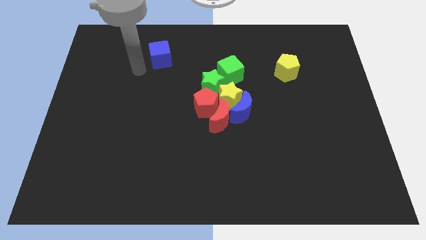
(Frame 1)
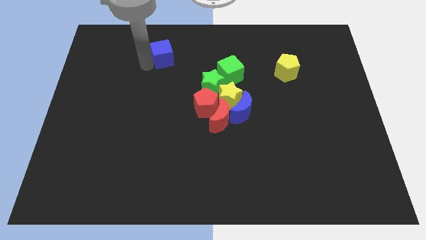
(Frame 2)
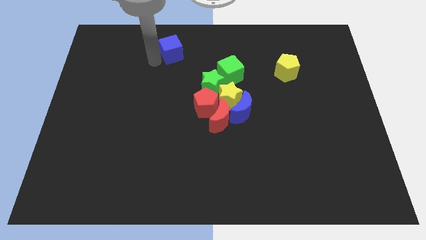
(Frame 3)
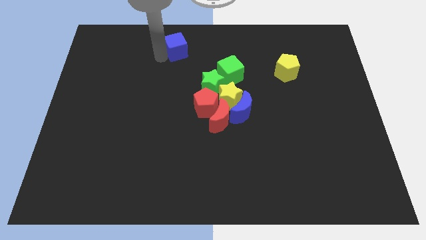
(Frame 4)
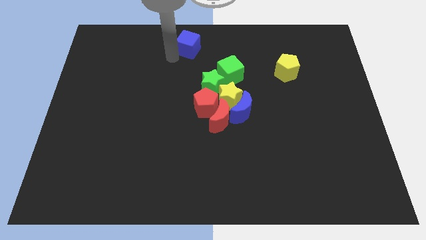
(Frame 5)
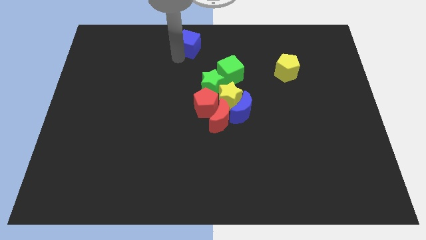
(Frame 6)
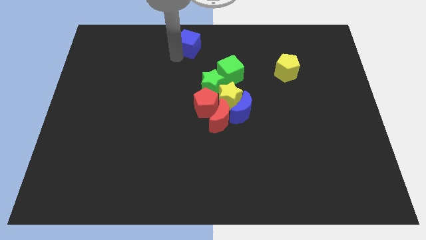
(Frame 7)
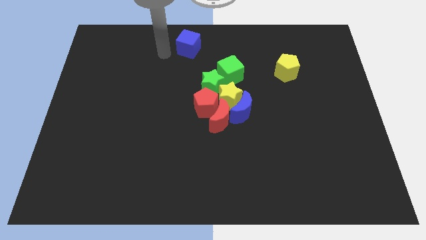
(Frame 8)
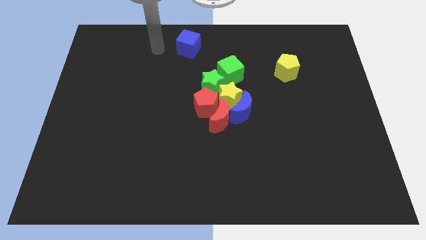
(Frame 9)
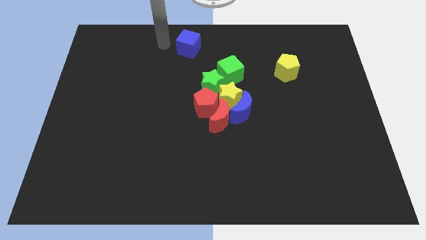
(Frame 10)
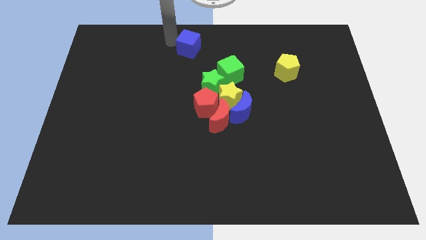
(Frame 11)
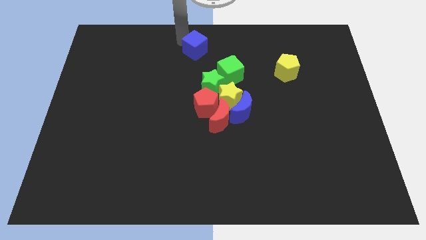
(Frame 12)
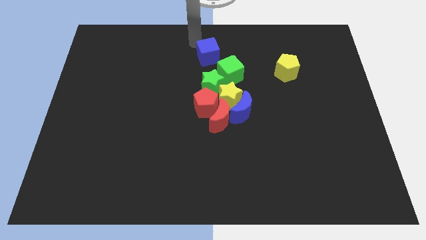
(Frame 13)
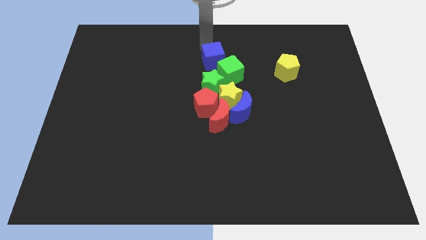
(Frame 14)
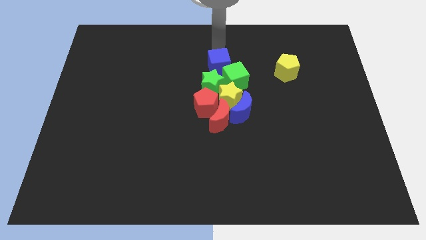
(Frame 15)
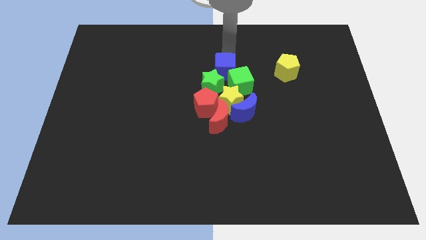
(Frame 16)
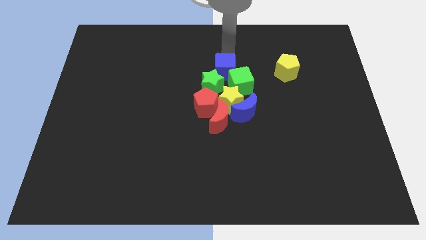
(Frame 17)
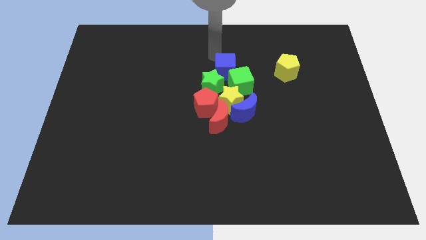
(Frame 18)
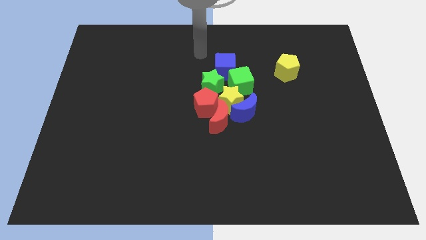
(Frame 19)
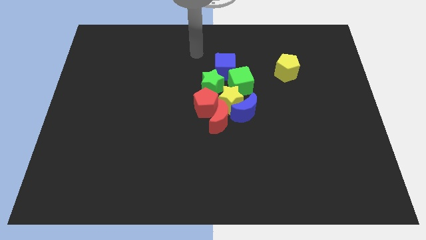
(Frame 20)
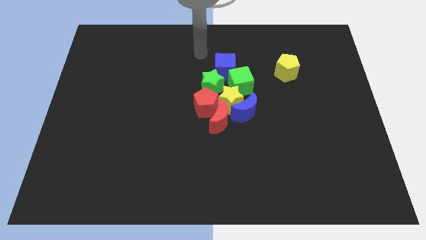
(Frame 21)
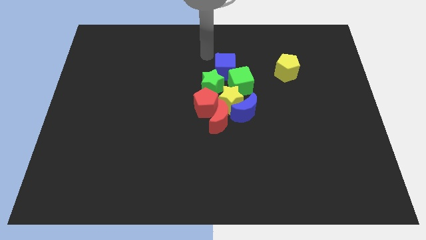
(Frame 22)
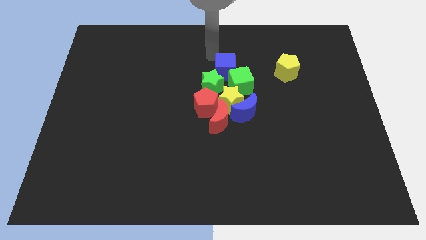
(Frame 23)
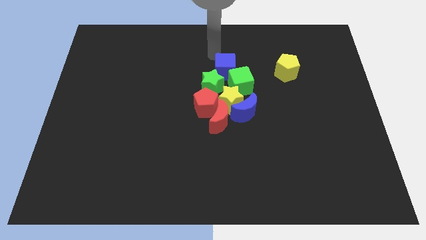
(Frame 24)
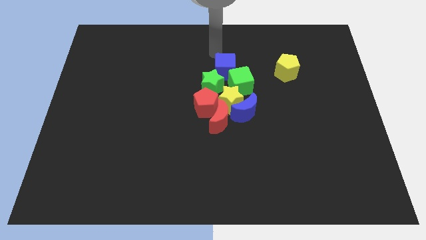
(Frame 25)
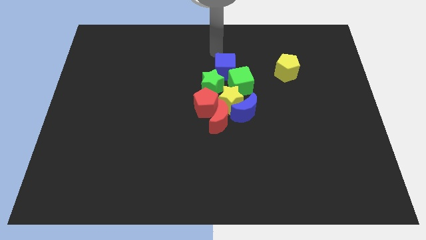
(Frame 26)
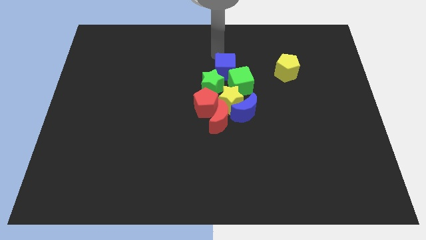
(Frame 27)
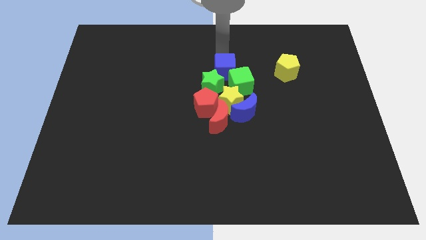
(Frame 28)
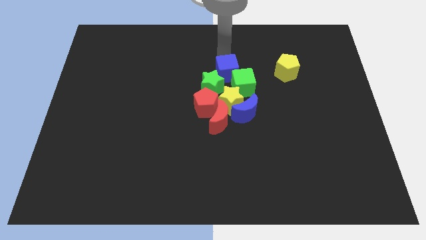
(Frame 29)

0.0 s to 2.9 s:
move the blue cube to all the cubes

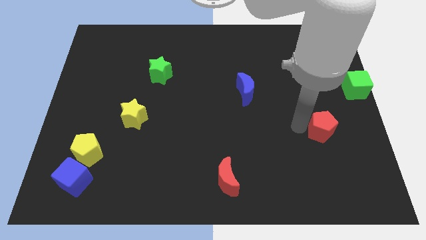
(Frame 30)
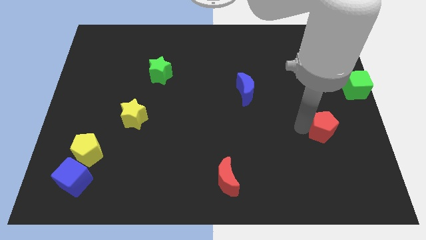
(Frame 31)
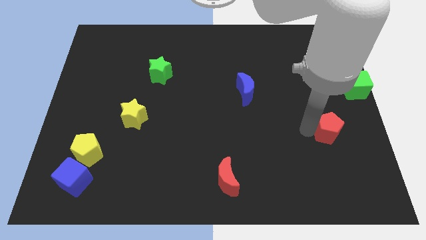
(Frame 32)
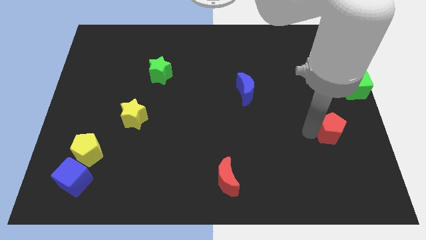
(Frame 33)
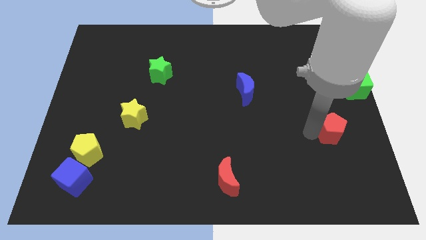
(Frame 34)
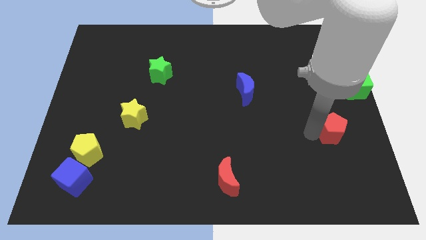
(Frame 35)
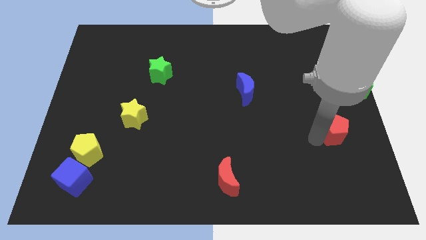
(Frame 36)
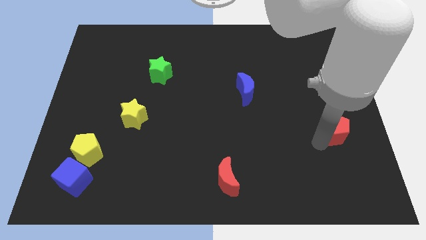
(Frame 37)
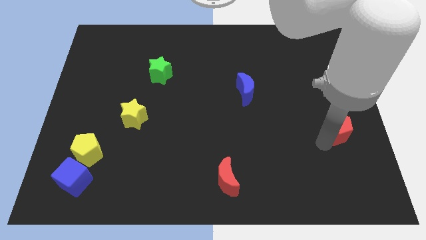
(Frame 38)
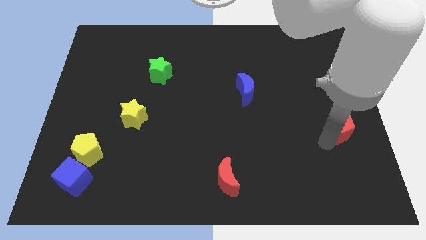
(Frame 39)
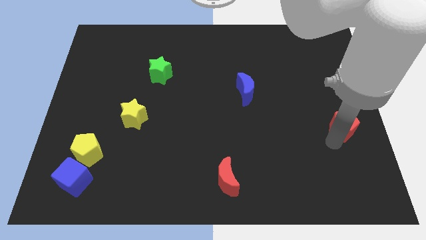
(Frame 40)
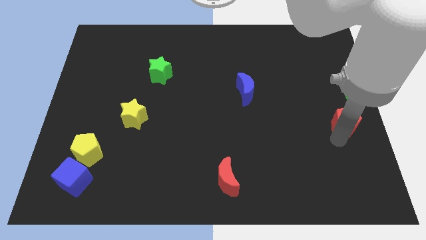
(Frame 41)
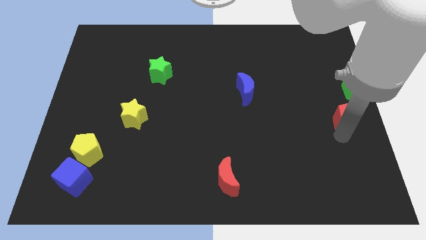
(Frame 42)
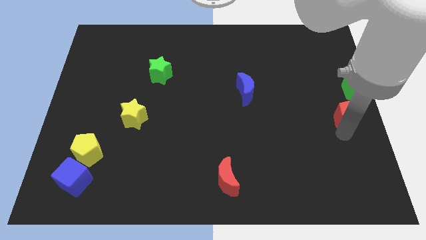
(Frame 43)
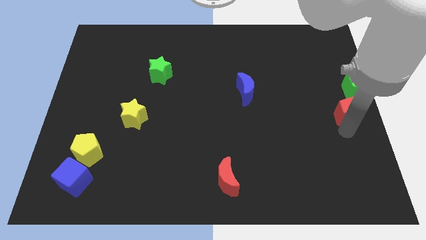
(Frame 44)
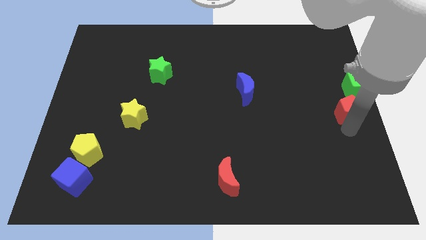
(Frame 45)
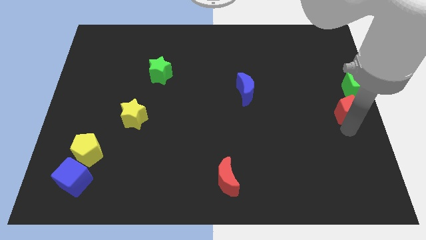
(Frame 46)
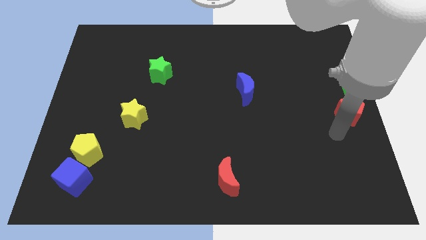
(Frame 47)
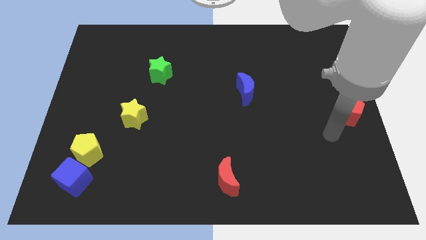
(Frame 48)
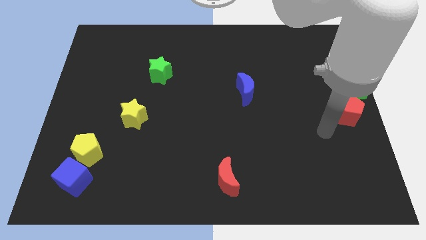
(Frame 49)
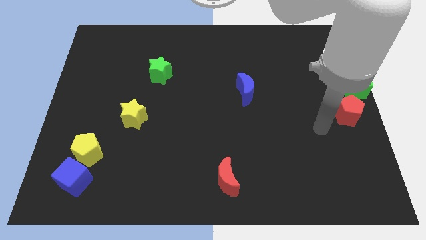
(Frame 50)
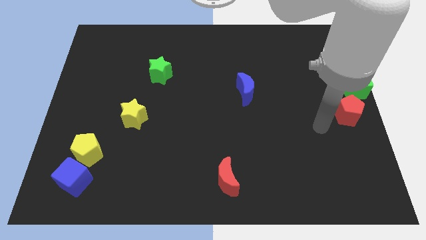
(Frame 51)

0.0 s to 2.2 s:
place the red pentagon diagonally to the left of the green cube

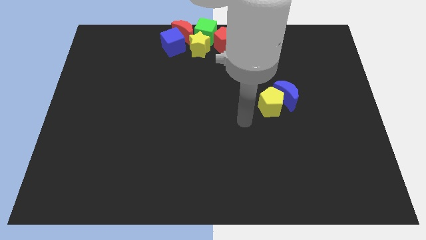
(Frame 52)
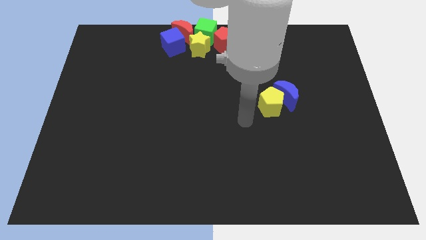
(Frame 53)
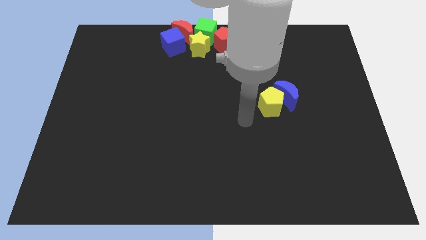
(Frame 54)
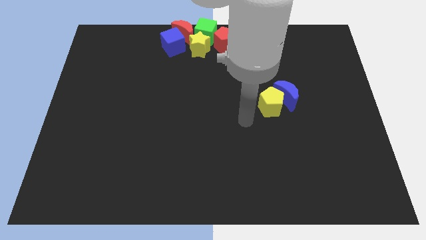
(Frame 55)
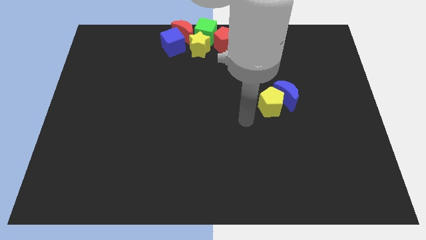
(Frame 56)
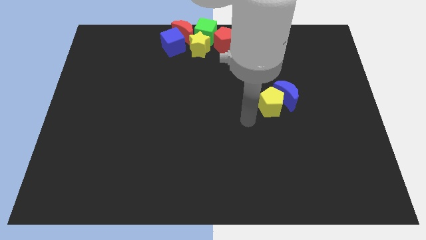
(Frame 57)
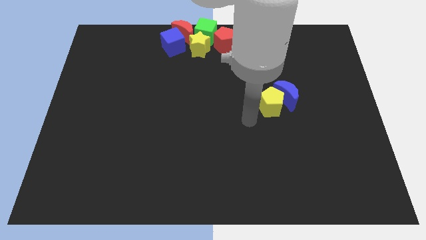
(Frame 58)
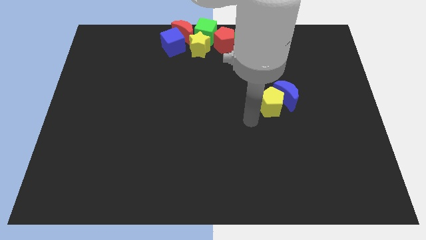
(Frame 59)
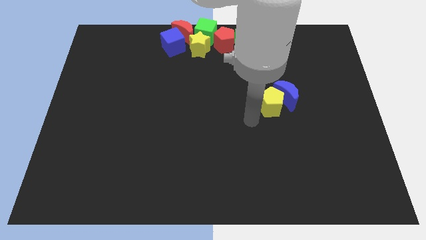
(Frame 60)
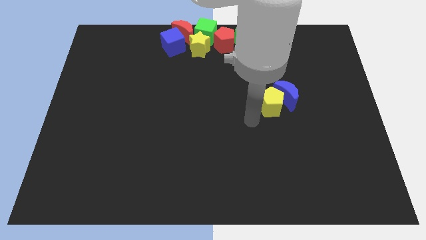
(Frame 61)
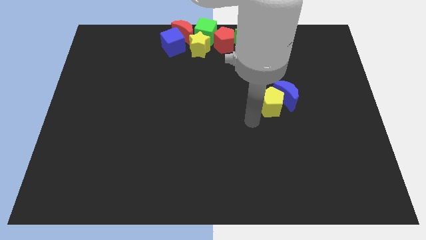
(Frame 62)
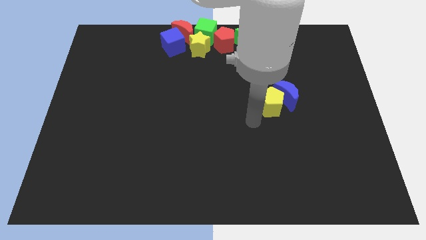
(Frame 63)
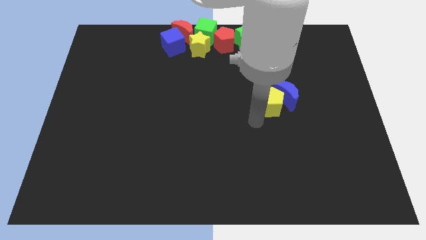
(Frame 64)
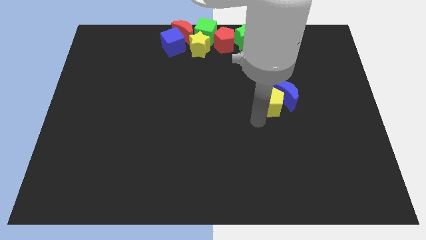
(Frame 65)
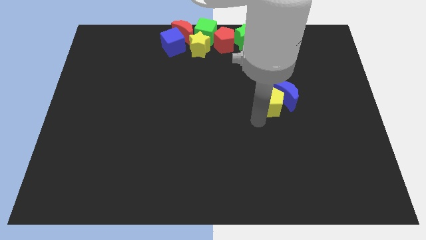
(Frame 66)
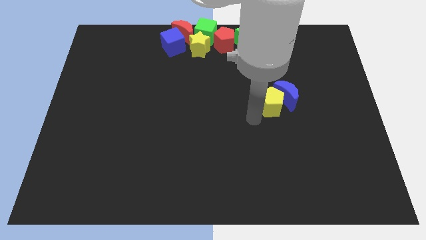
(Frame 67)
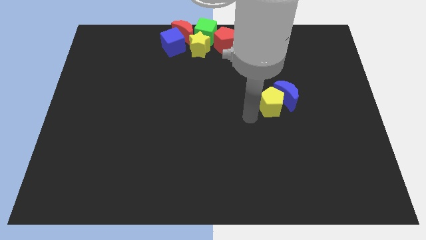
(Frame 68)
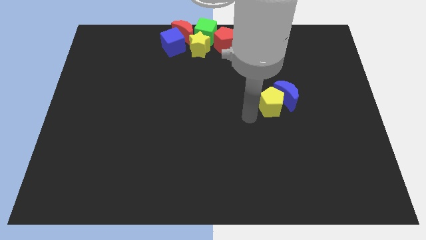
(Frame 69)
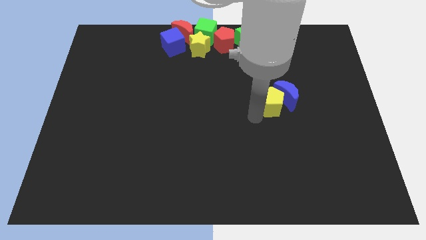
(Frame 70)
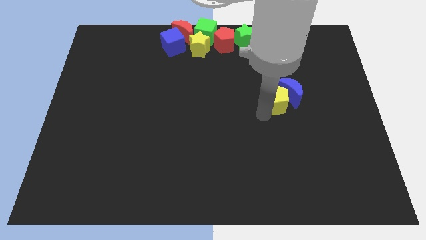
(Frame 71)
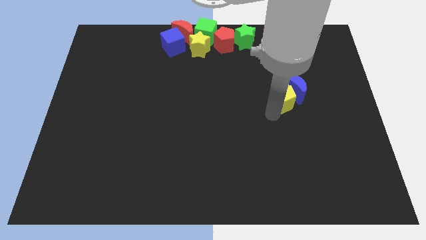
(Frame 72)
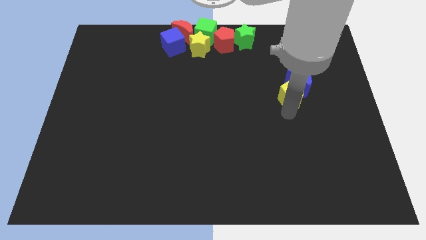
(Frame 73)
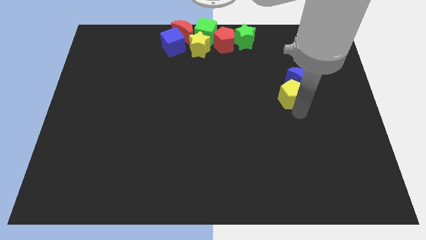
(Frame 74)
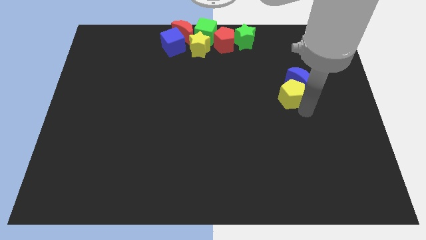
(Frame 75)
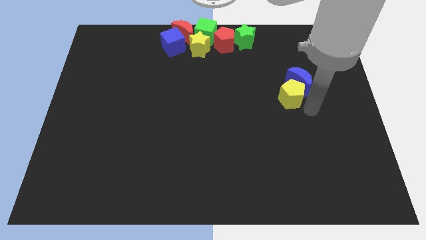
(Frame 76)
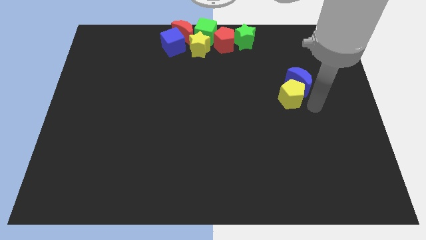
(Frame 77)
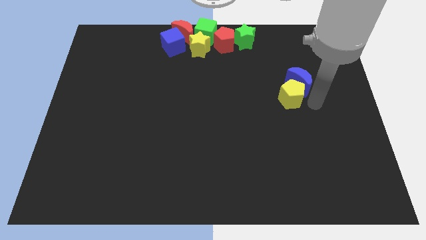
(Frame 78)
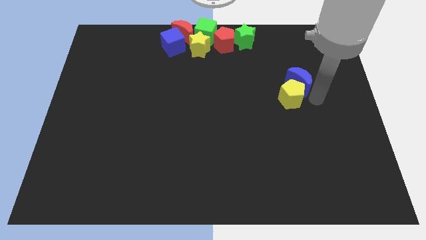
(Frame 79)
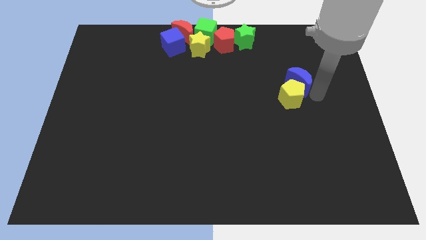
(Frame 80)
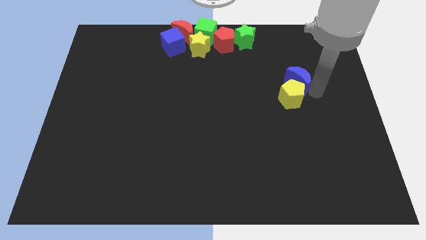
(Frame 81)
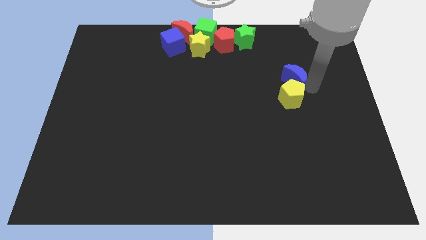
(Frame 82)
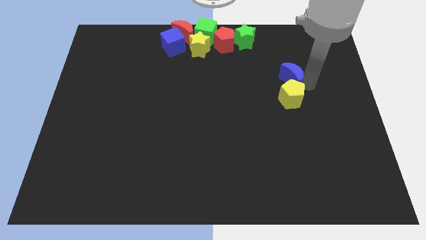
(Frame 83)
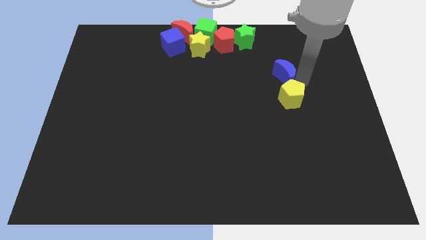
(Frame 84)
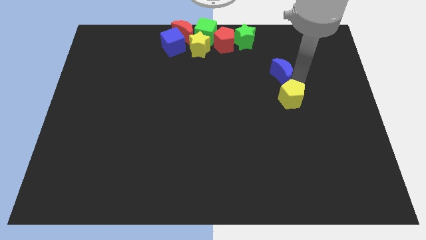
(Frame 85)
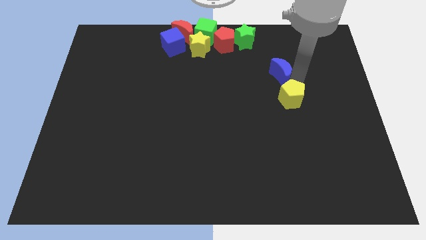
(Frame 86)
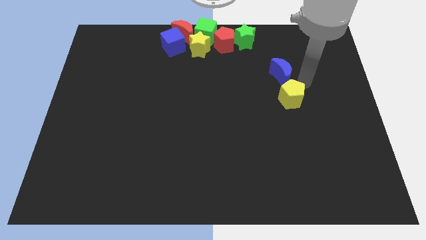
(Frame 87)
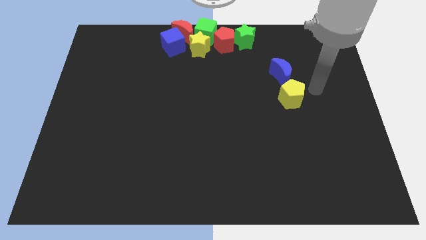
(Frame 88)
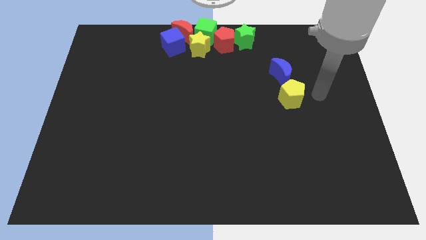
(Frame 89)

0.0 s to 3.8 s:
push the blue moon to the top side of the yellow pentagon
